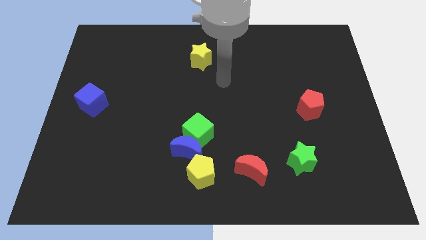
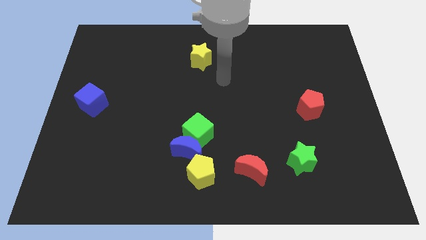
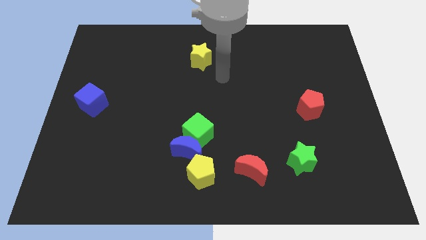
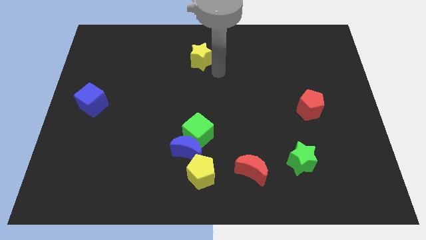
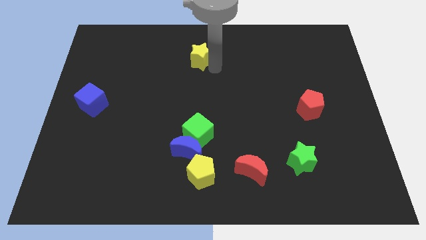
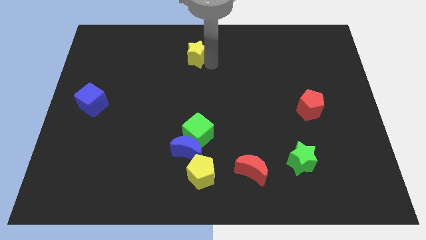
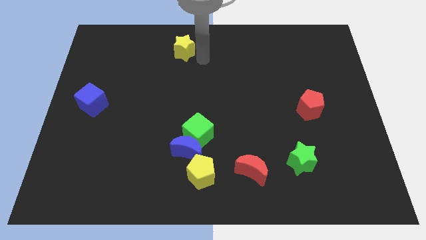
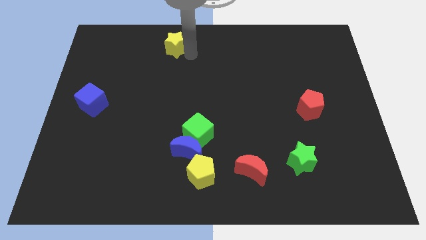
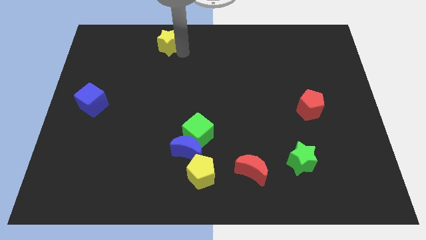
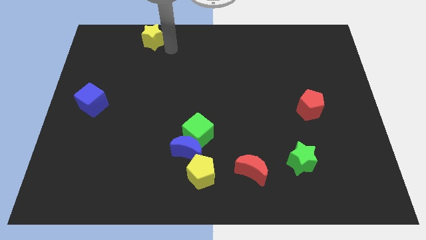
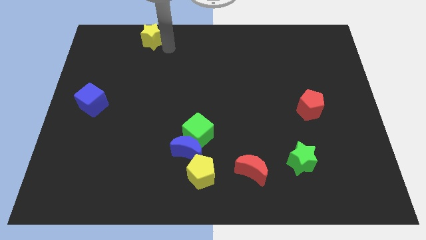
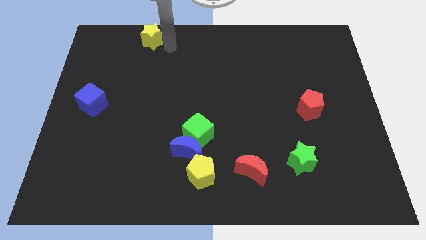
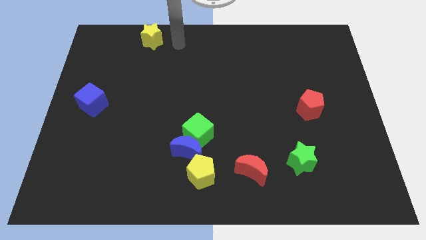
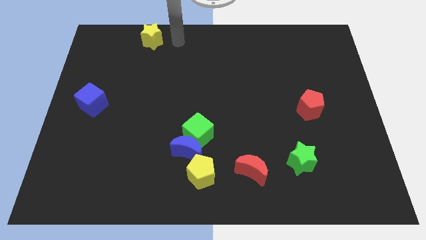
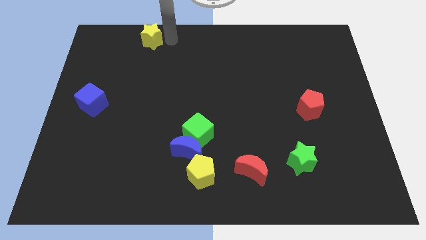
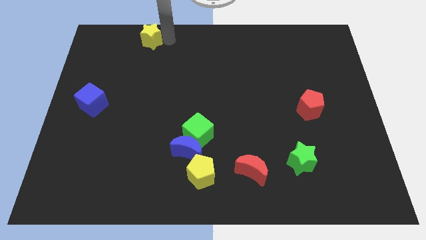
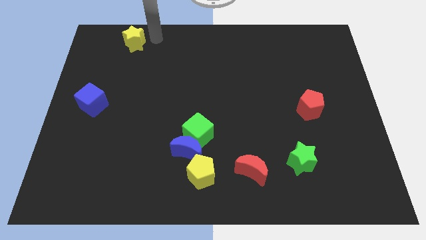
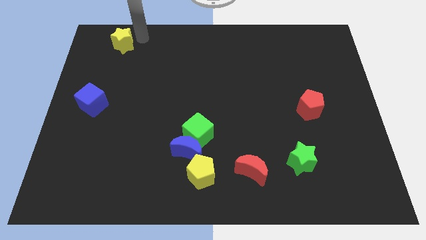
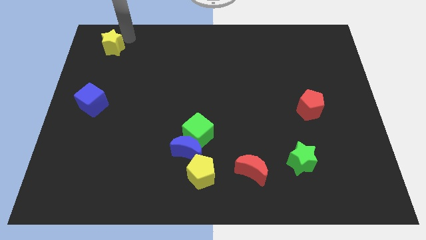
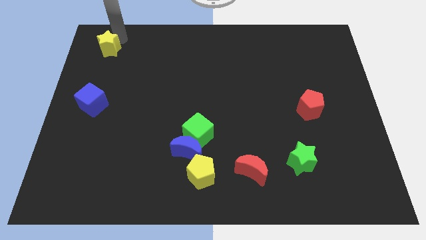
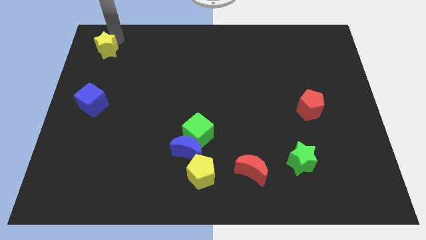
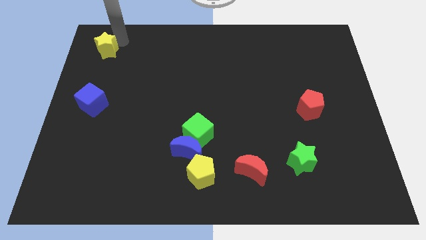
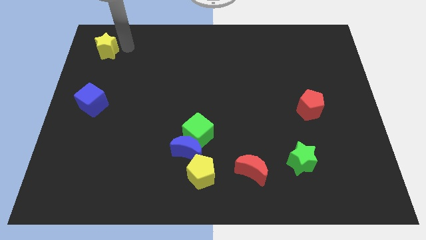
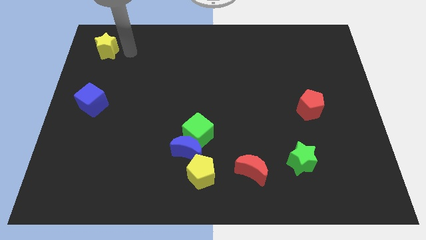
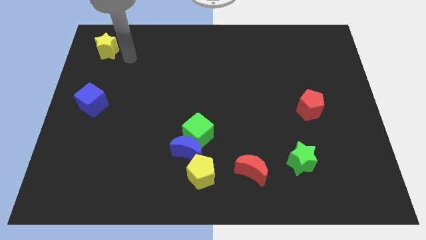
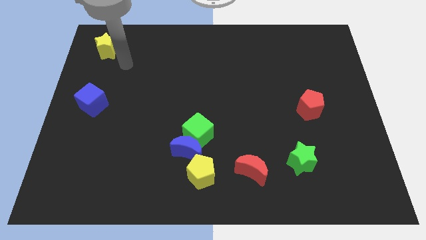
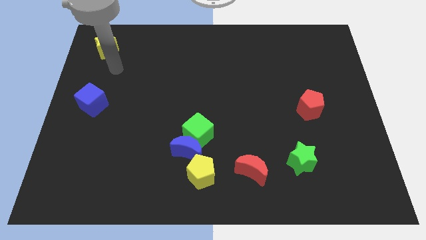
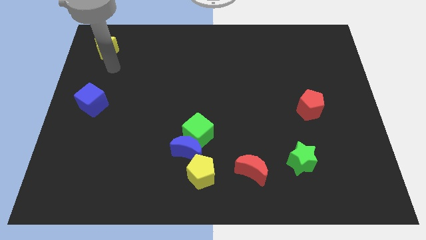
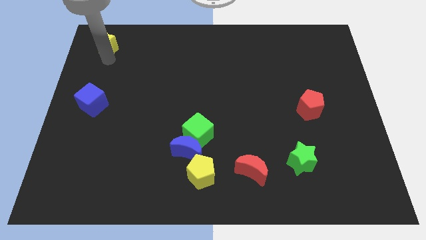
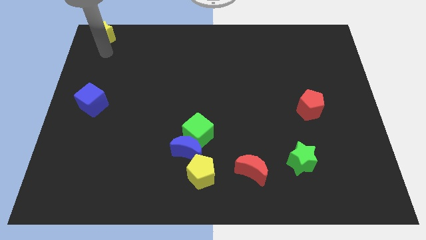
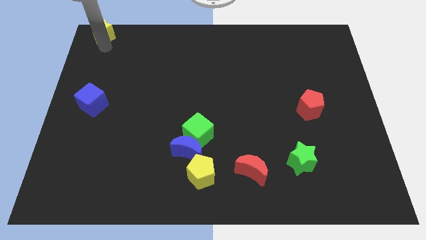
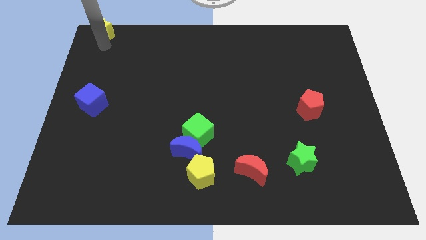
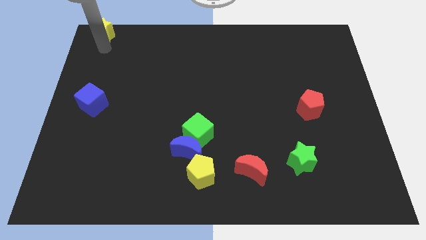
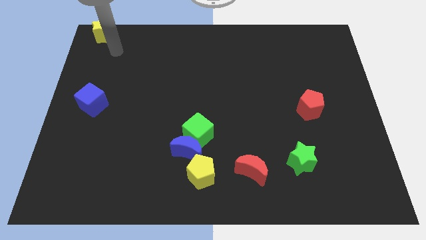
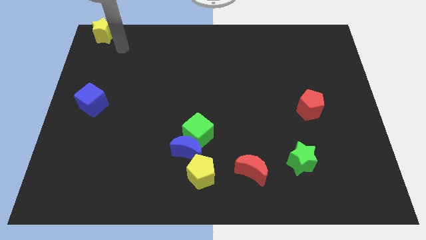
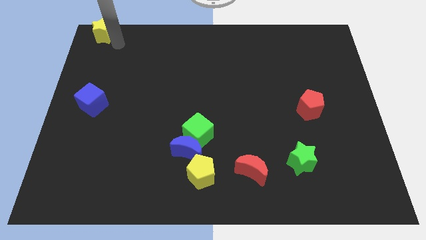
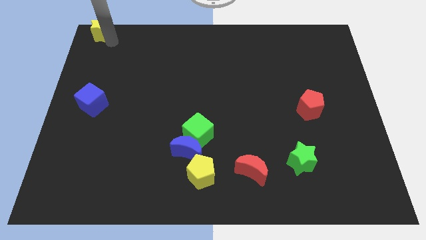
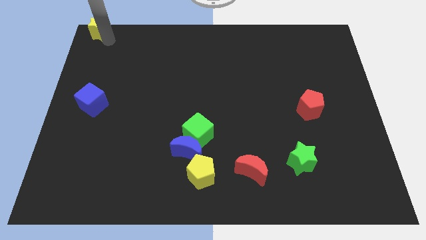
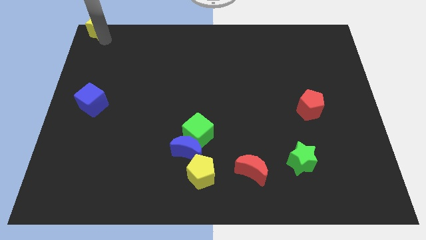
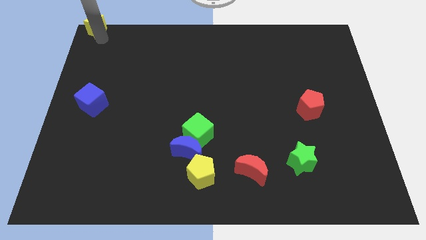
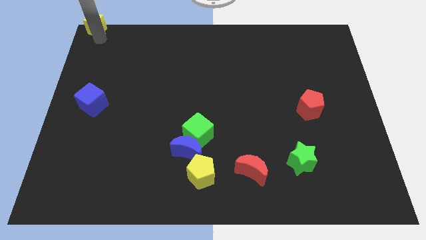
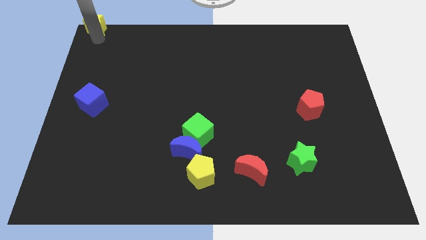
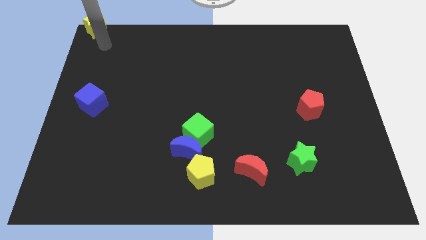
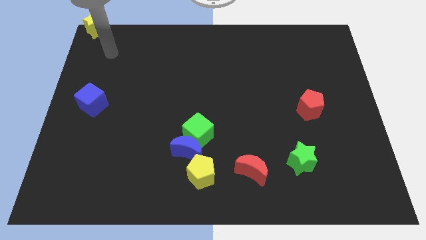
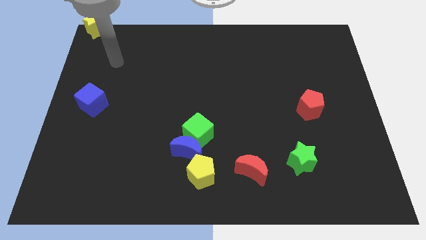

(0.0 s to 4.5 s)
place the yellow star at the top left corner of the board

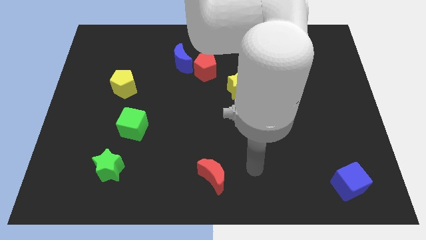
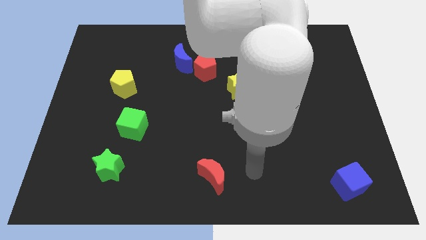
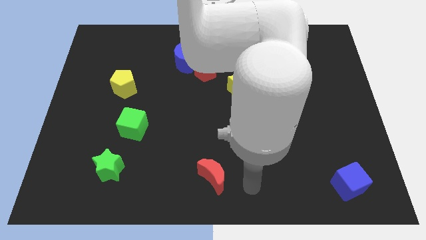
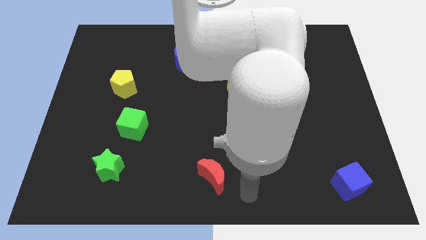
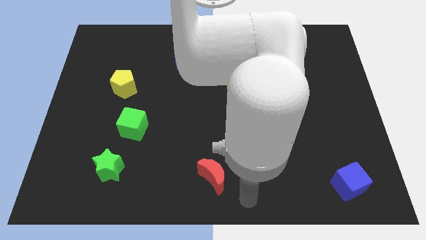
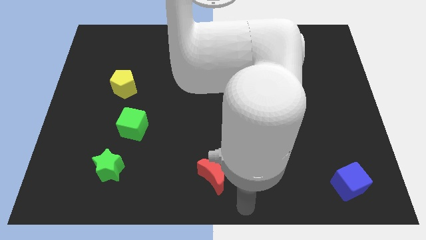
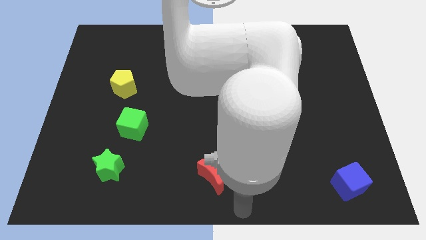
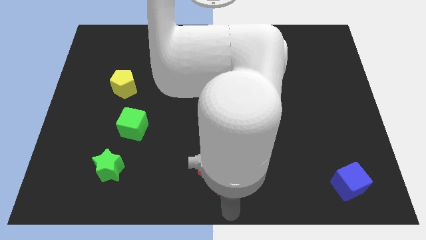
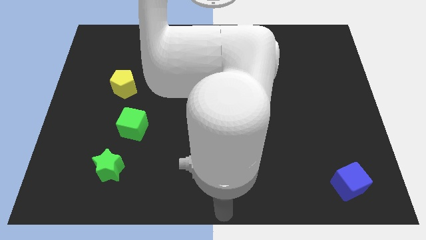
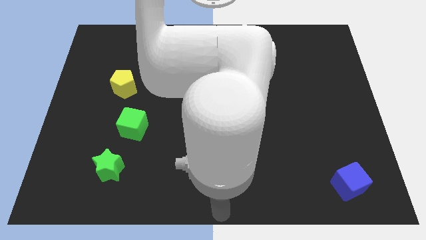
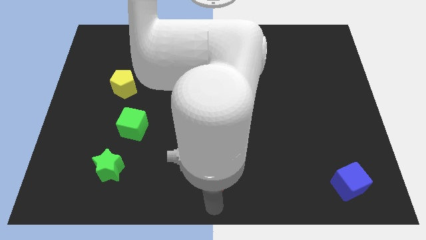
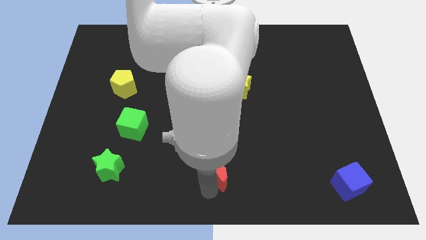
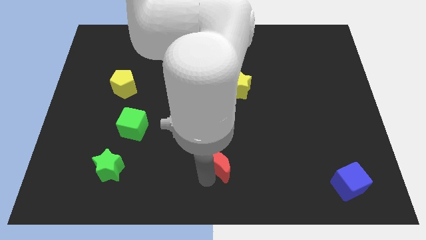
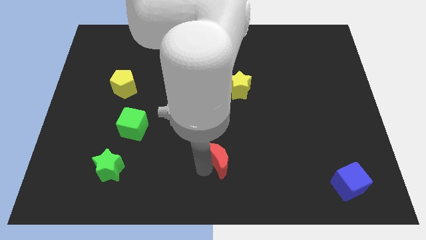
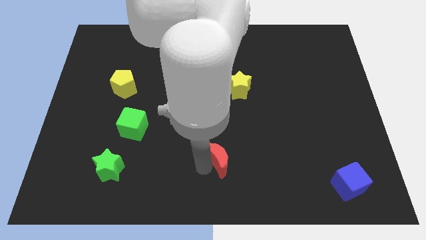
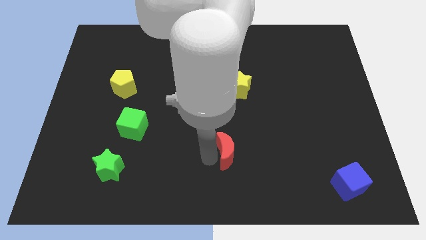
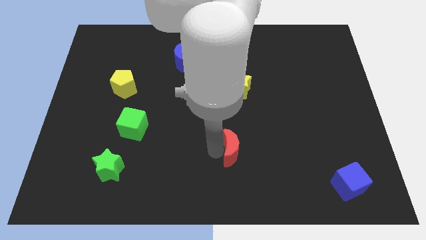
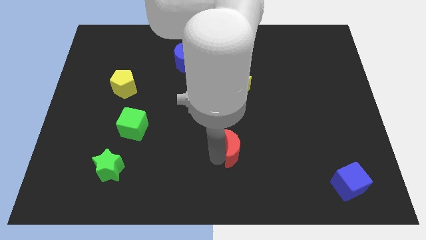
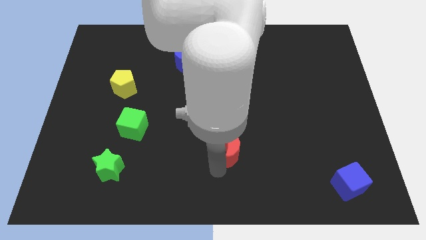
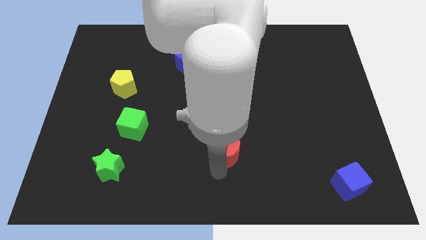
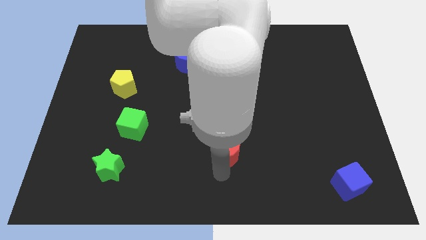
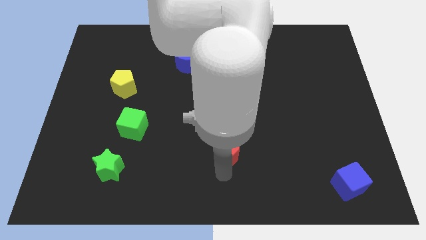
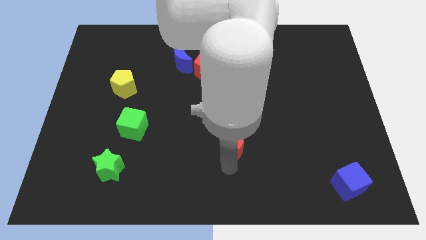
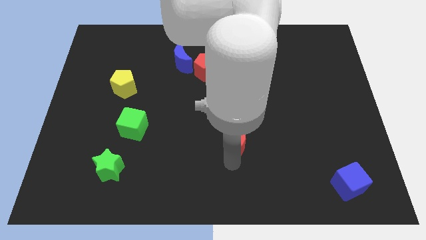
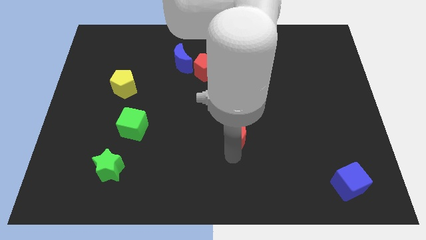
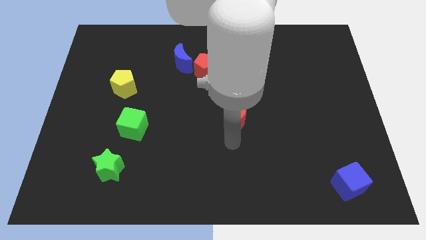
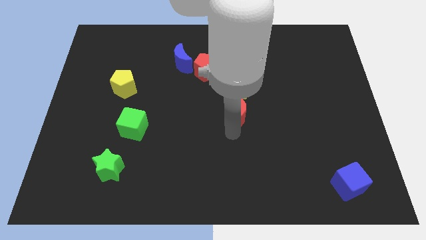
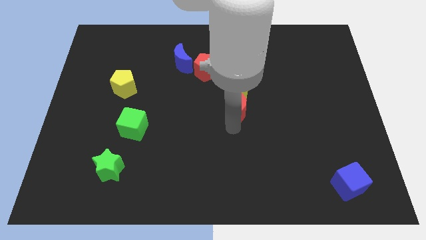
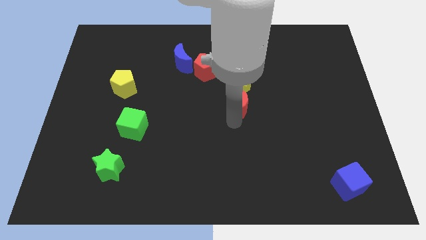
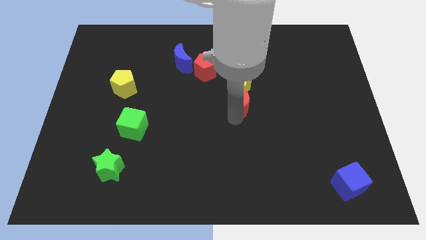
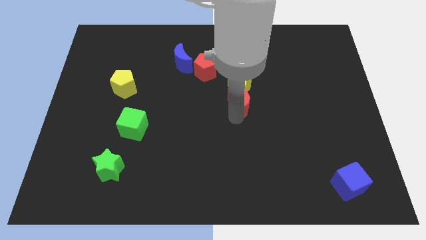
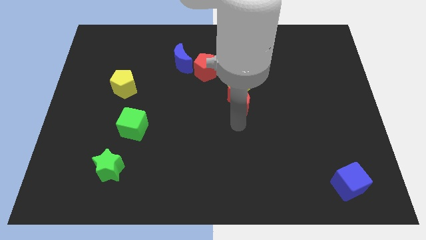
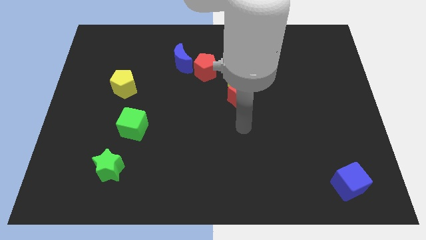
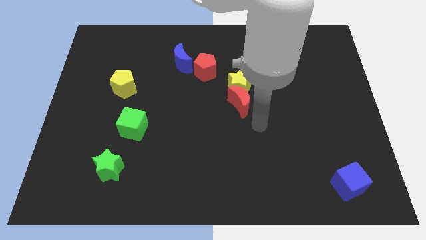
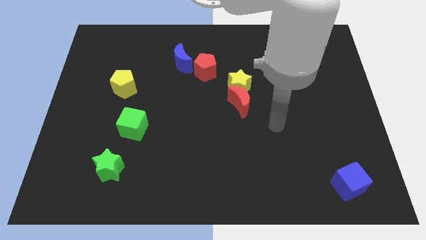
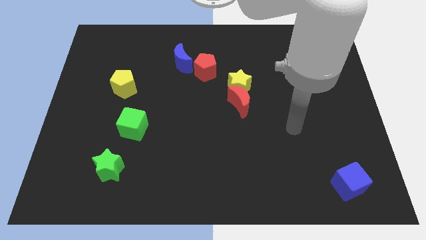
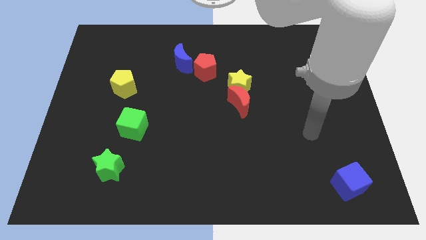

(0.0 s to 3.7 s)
move arm near red moon

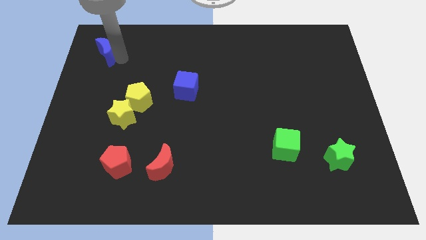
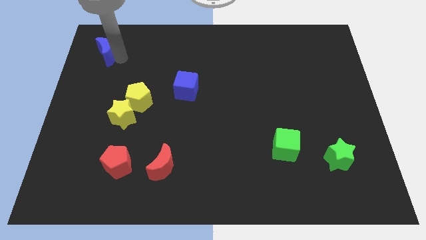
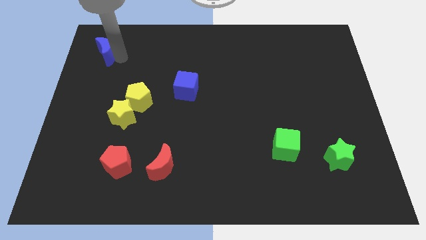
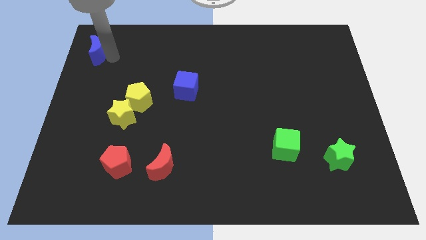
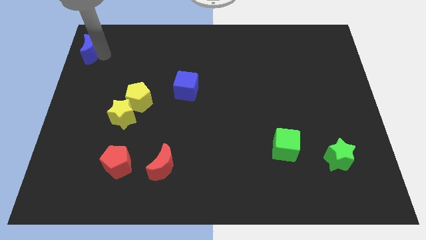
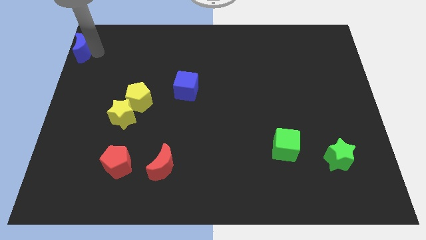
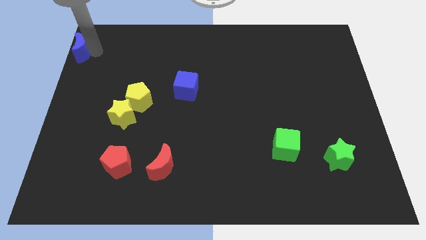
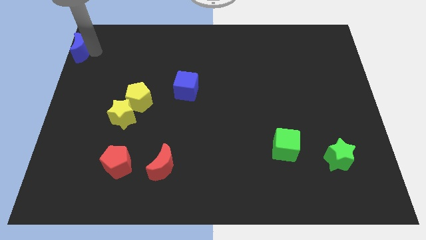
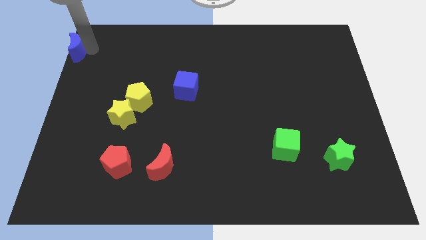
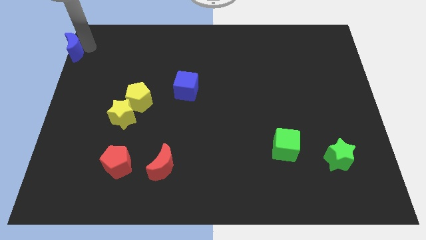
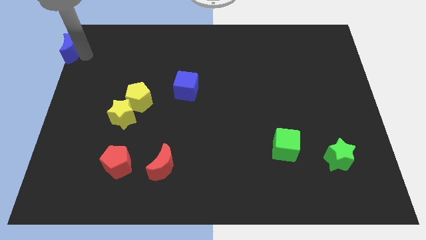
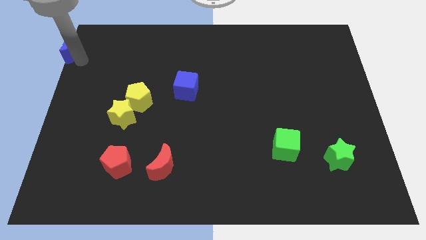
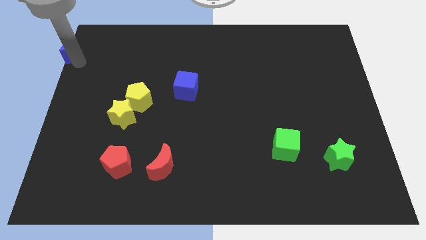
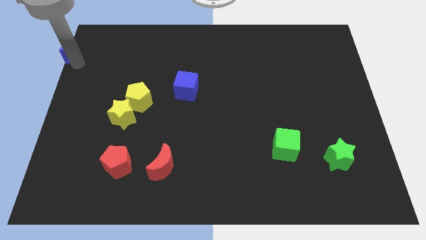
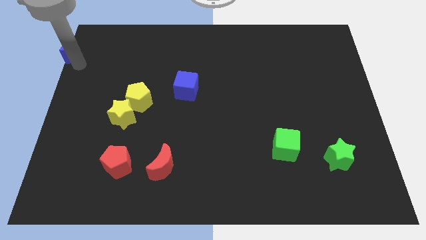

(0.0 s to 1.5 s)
move the blue moon to the left of the board
